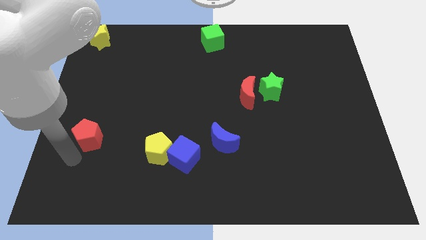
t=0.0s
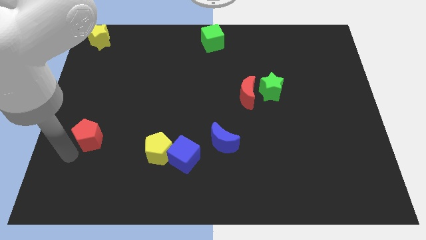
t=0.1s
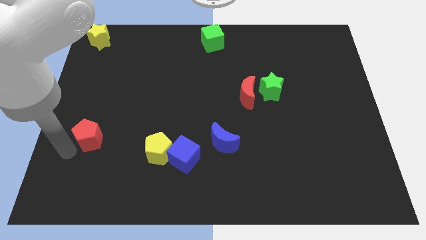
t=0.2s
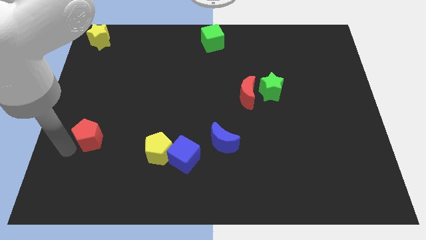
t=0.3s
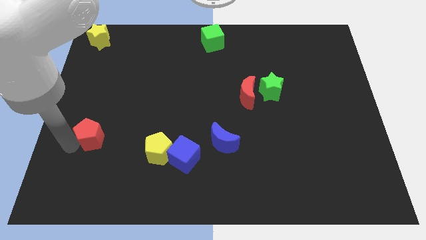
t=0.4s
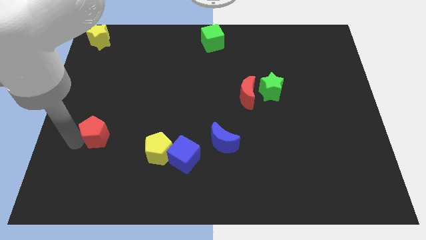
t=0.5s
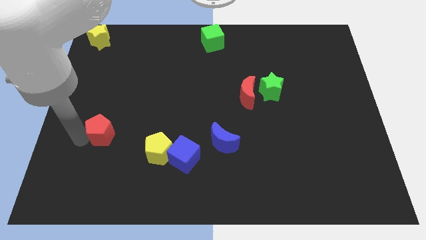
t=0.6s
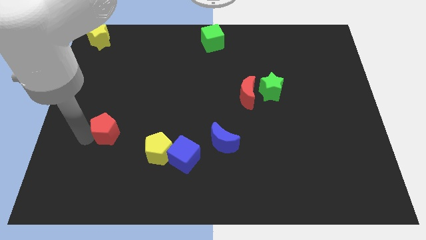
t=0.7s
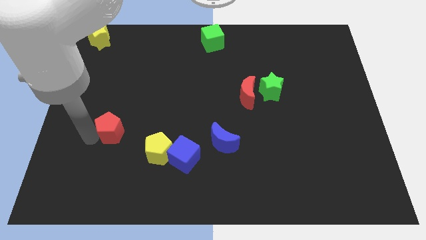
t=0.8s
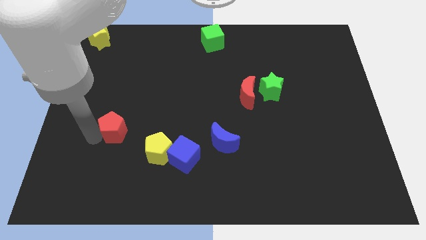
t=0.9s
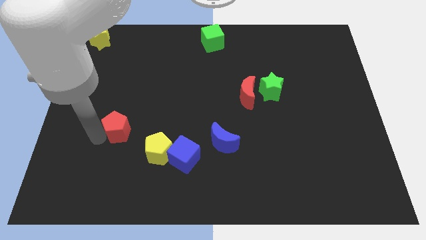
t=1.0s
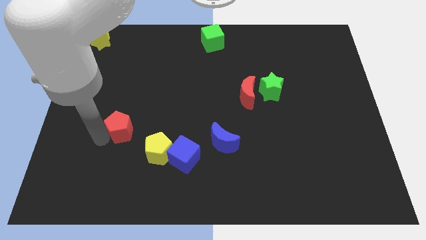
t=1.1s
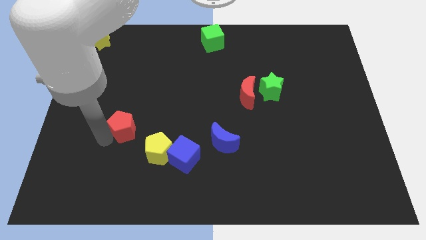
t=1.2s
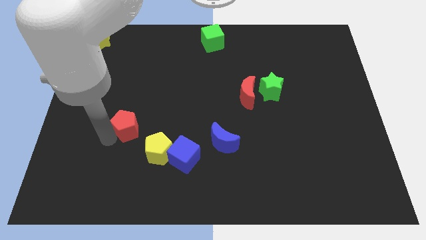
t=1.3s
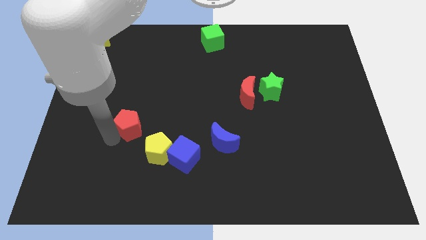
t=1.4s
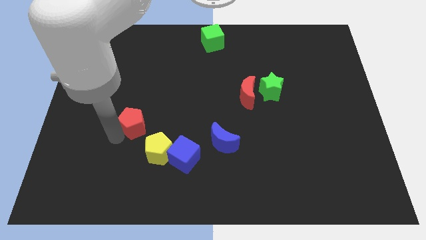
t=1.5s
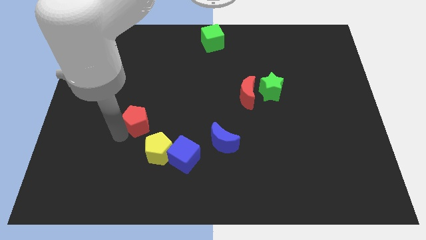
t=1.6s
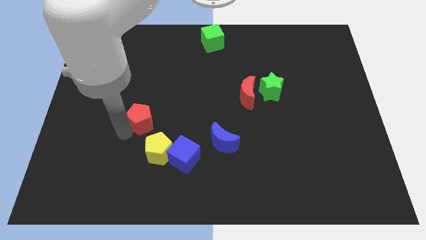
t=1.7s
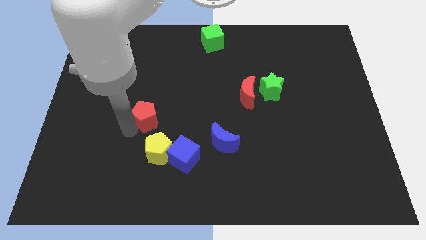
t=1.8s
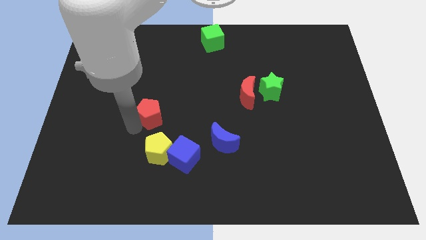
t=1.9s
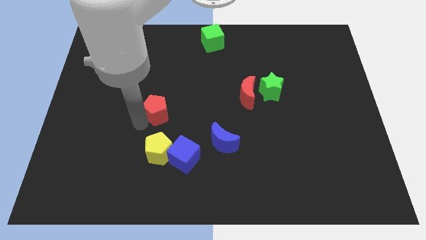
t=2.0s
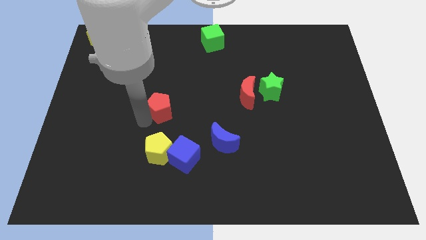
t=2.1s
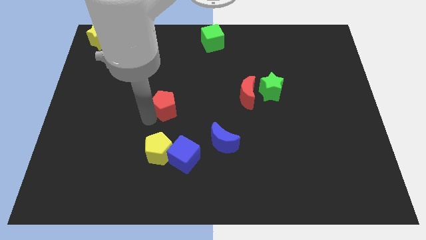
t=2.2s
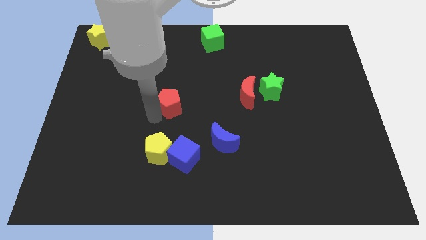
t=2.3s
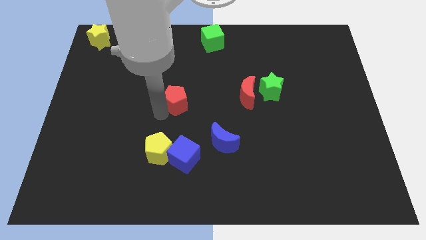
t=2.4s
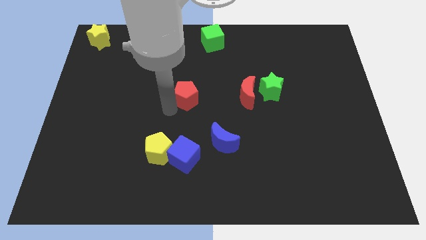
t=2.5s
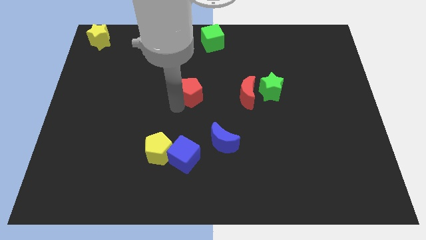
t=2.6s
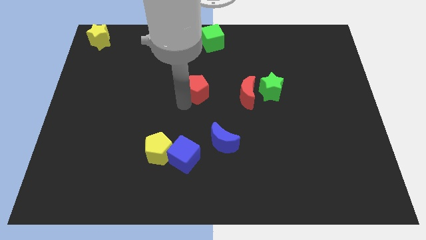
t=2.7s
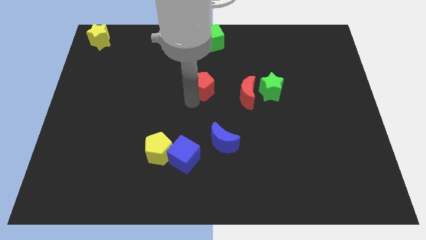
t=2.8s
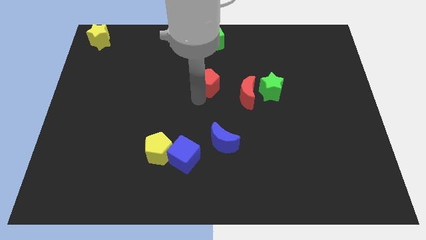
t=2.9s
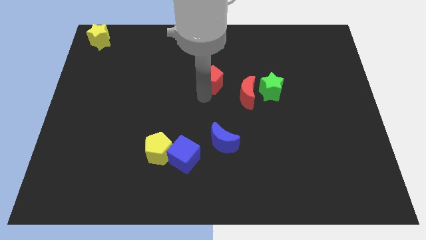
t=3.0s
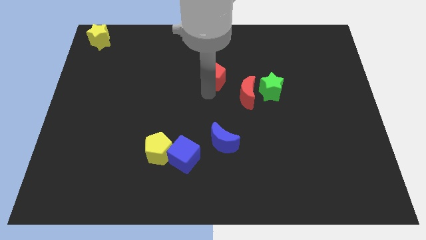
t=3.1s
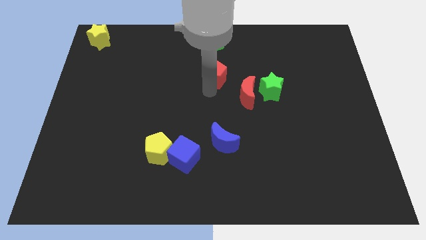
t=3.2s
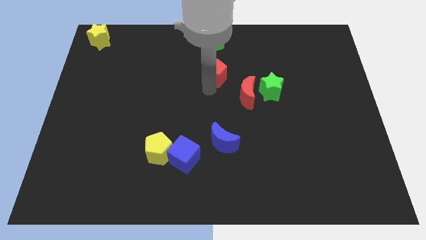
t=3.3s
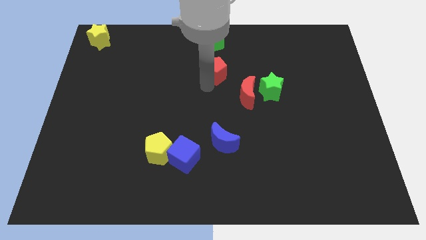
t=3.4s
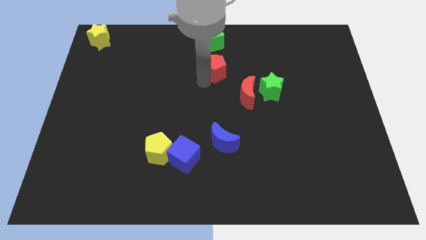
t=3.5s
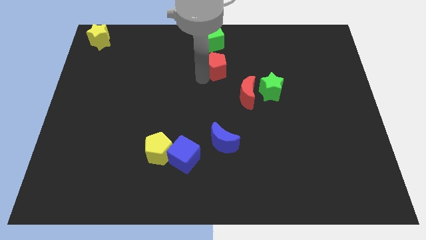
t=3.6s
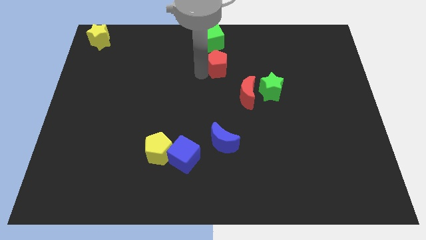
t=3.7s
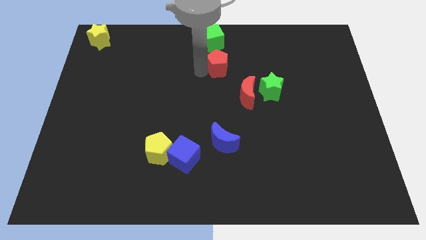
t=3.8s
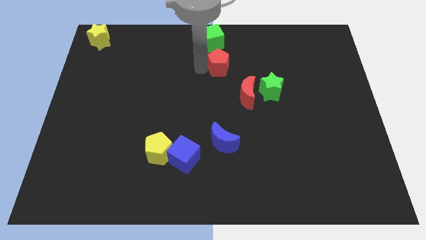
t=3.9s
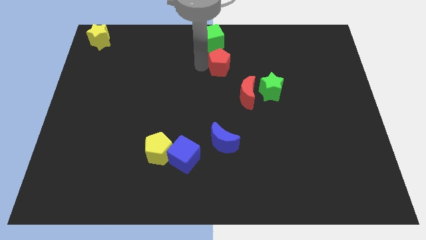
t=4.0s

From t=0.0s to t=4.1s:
push the red pentagon to the bottom of the green cube

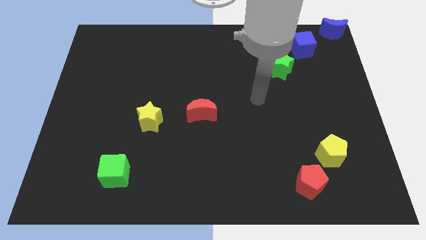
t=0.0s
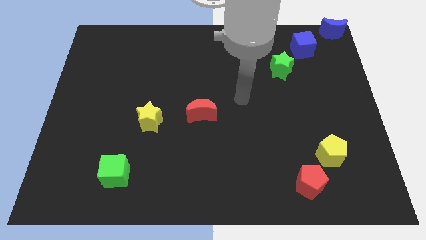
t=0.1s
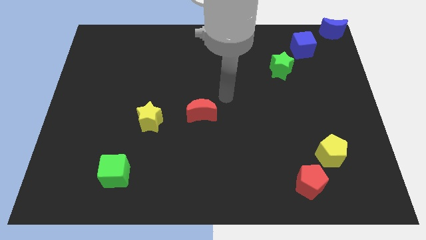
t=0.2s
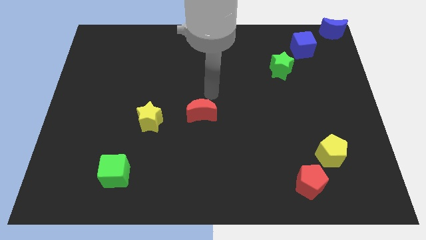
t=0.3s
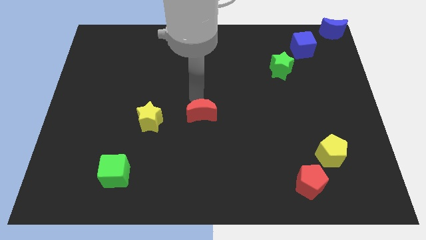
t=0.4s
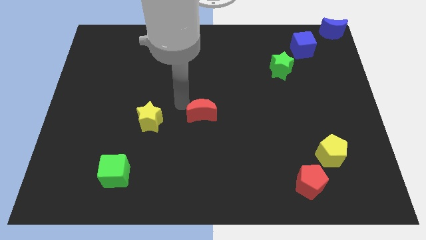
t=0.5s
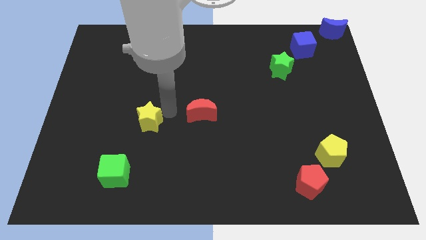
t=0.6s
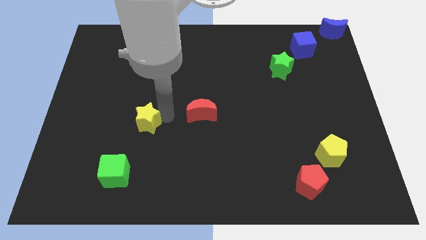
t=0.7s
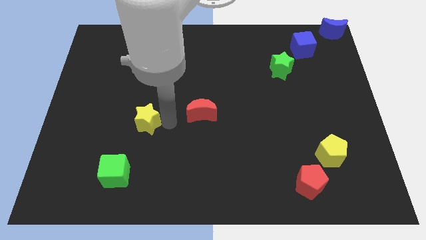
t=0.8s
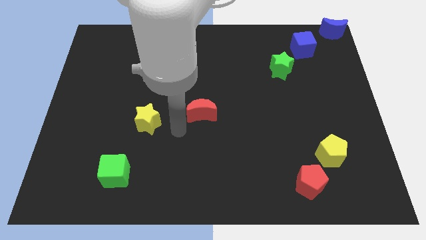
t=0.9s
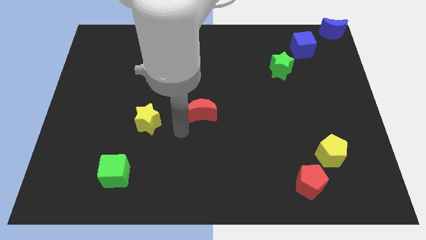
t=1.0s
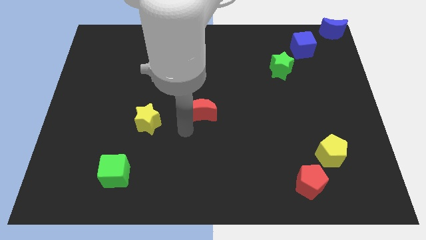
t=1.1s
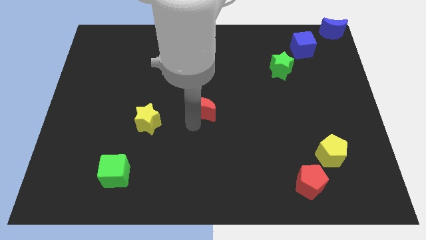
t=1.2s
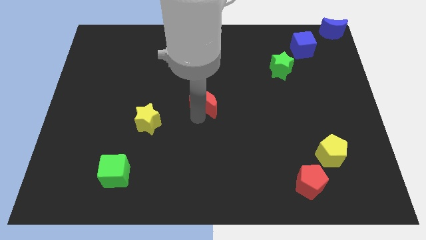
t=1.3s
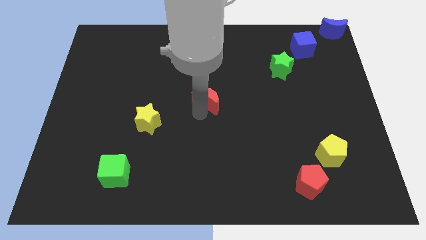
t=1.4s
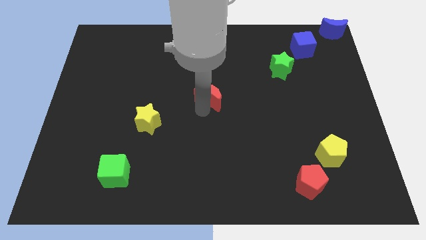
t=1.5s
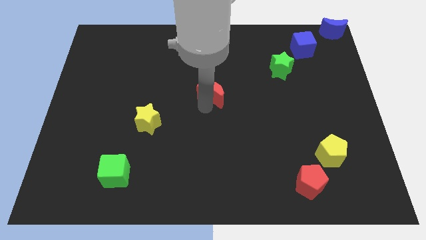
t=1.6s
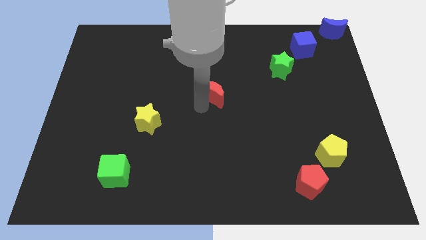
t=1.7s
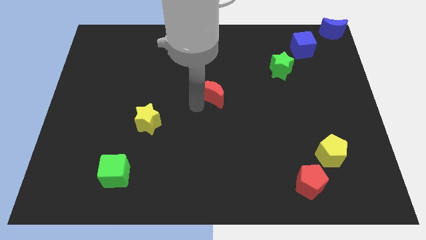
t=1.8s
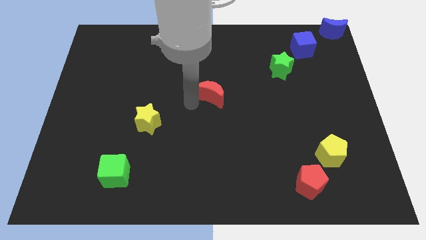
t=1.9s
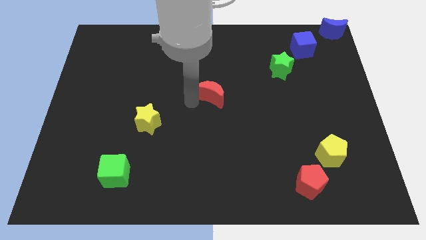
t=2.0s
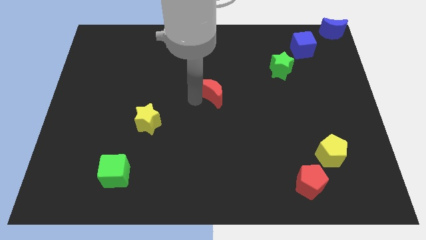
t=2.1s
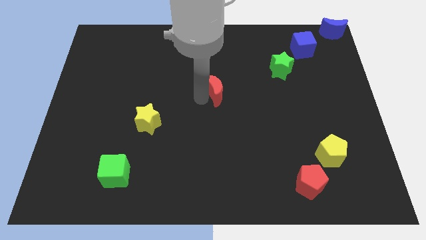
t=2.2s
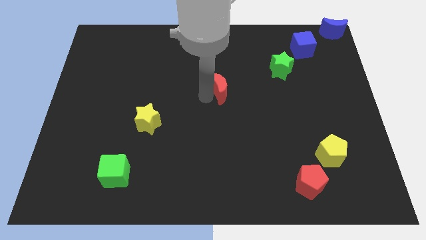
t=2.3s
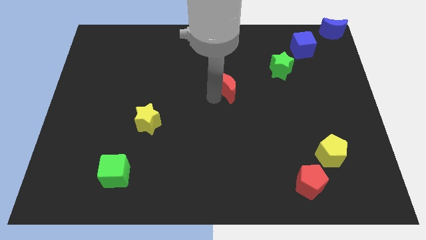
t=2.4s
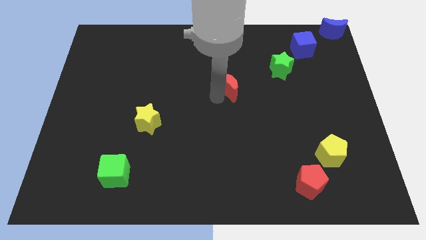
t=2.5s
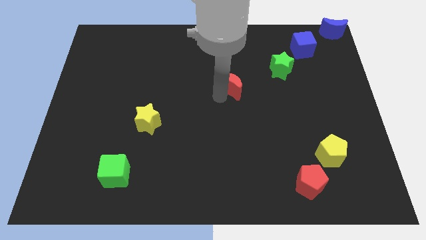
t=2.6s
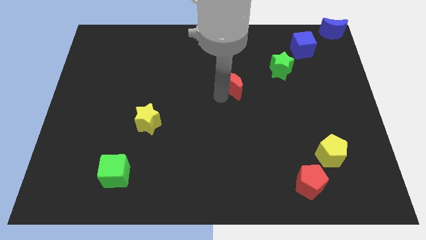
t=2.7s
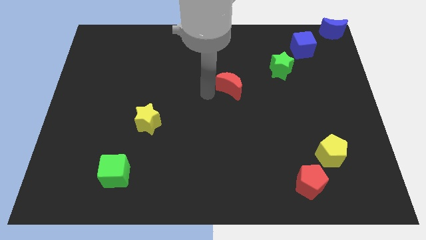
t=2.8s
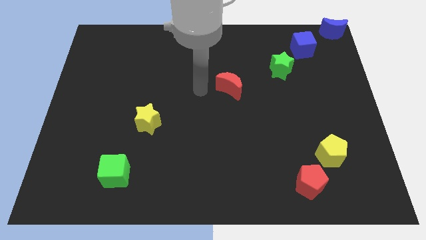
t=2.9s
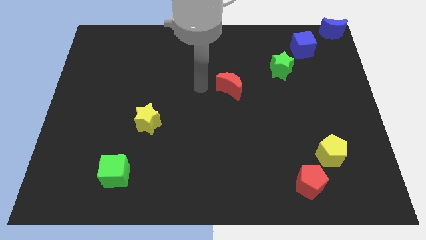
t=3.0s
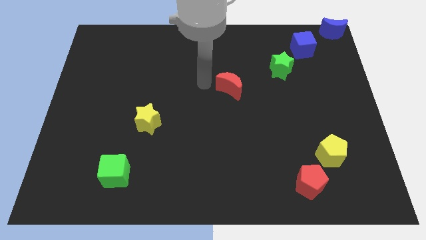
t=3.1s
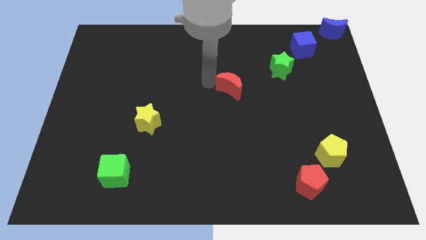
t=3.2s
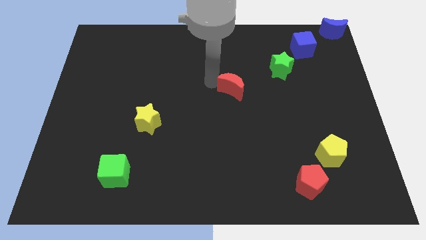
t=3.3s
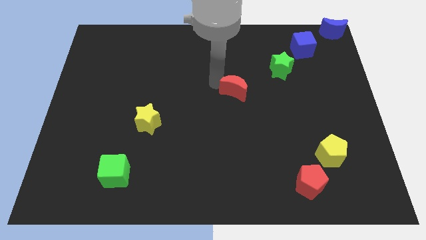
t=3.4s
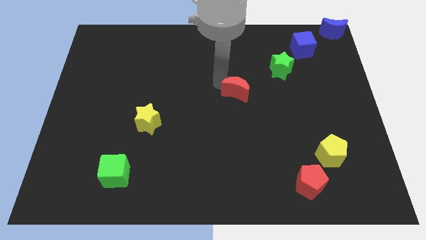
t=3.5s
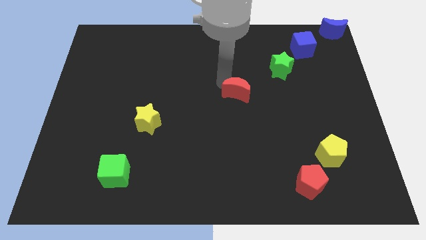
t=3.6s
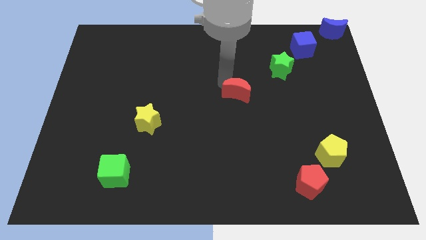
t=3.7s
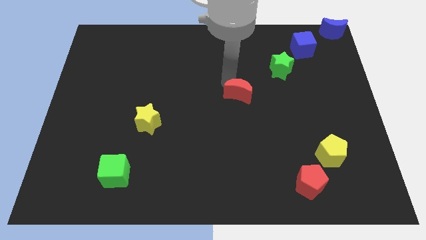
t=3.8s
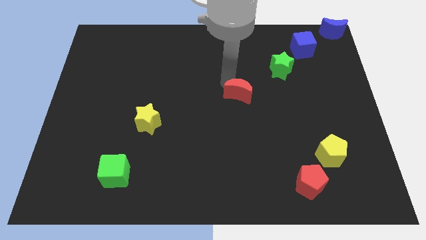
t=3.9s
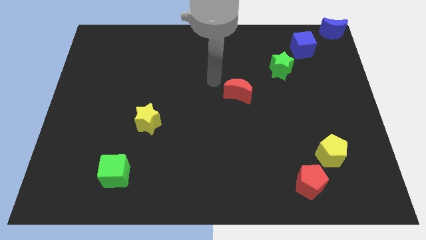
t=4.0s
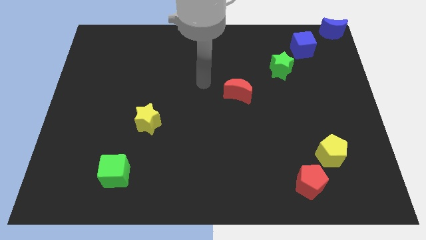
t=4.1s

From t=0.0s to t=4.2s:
slide the red crescent slightly towards the green star

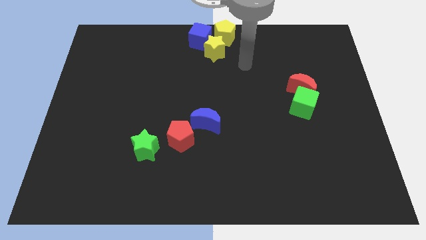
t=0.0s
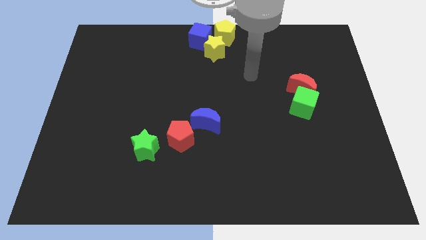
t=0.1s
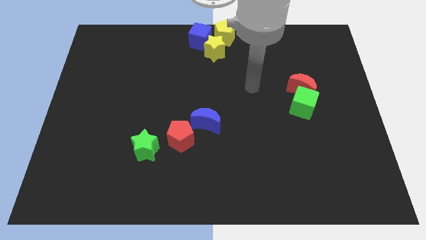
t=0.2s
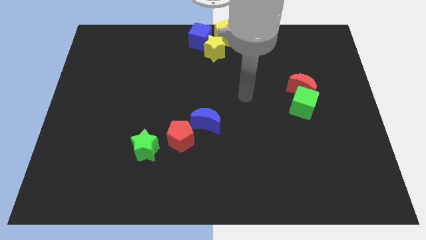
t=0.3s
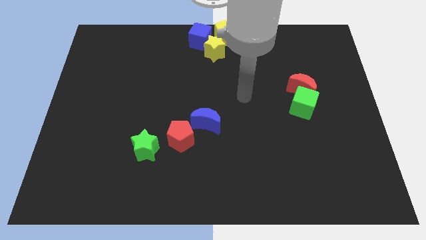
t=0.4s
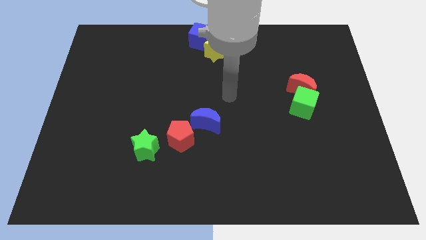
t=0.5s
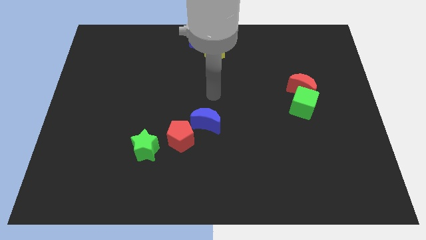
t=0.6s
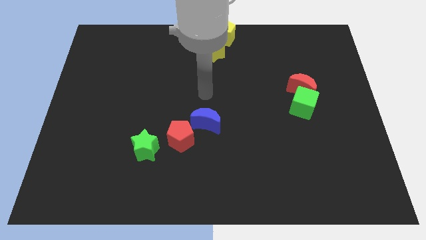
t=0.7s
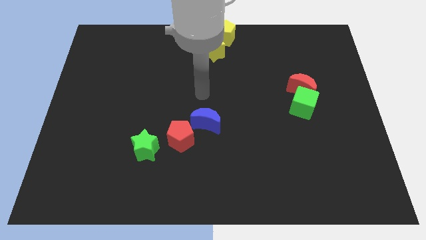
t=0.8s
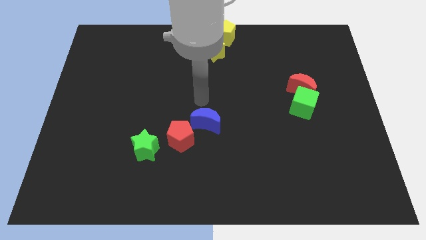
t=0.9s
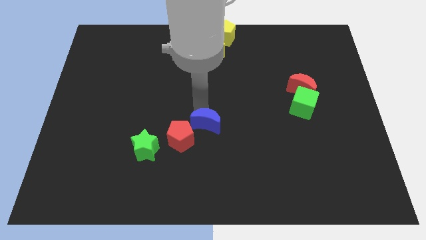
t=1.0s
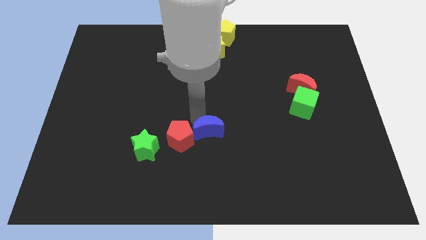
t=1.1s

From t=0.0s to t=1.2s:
push blue moon slightly downwards
